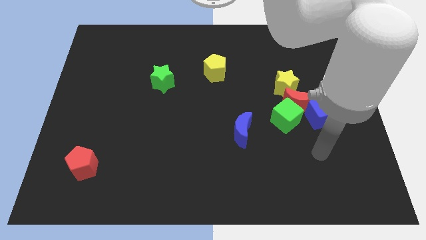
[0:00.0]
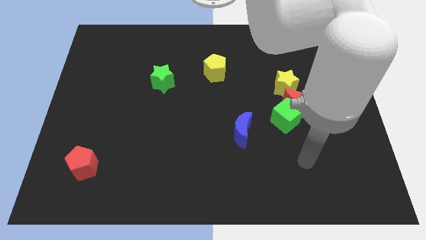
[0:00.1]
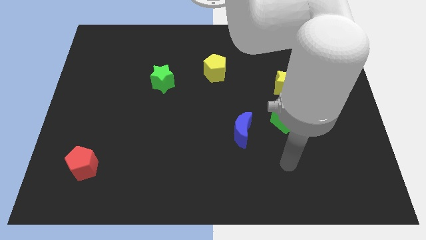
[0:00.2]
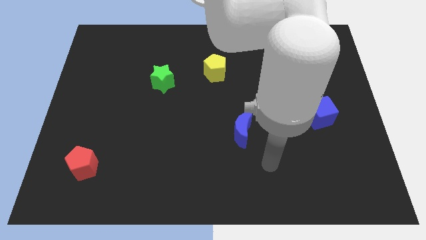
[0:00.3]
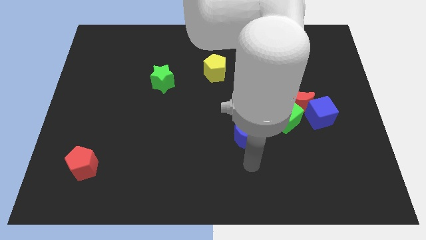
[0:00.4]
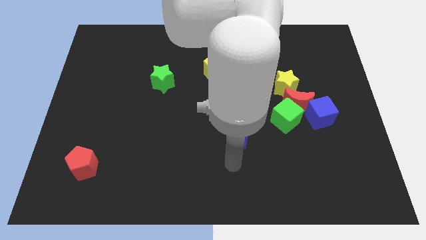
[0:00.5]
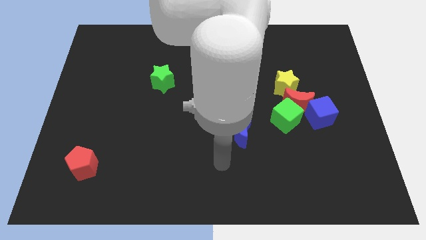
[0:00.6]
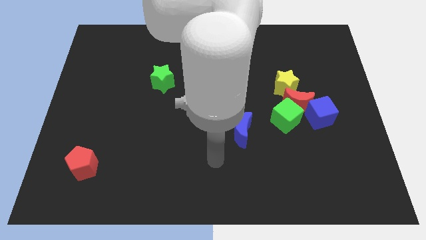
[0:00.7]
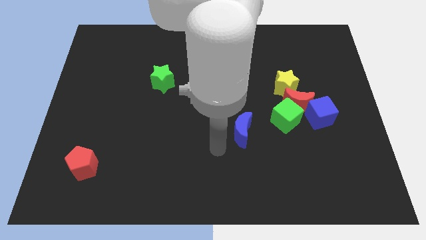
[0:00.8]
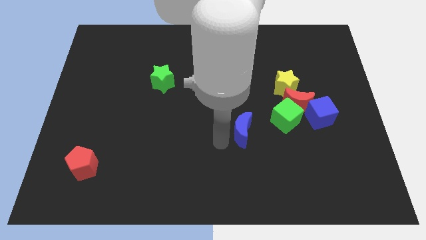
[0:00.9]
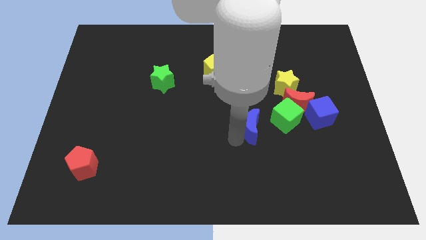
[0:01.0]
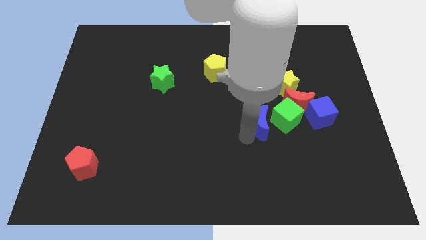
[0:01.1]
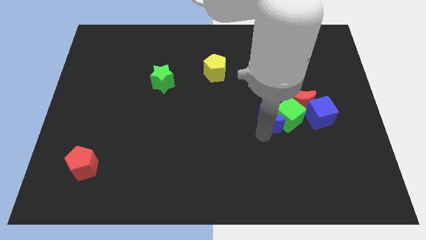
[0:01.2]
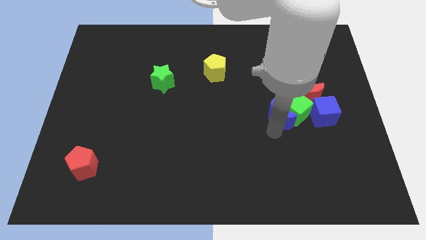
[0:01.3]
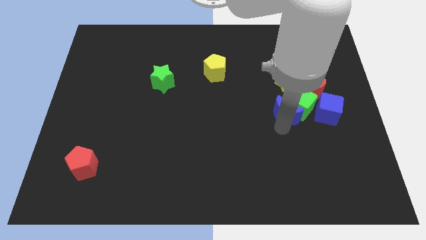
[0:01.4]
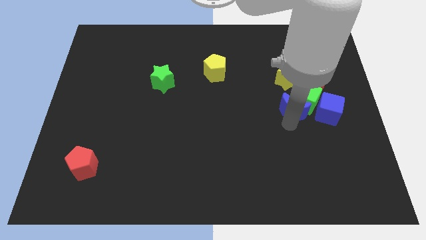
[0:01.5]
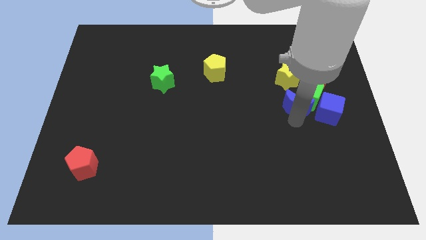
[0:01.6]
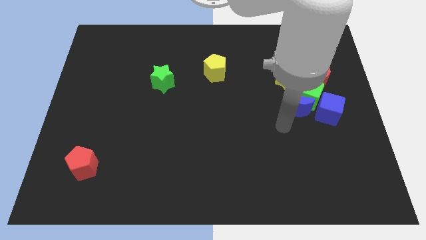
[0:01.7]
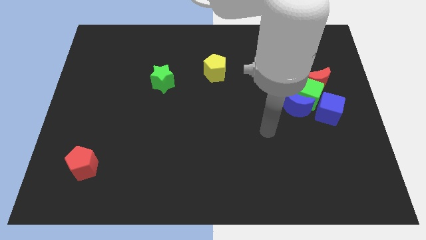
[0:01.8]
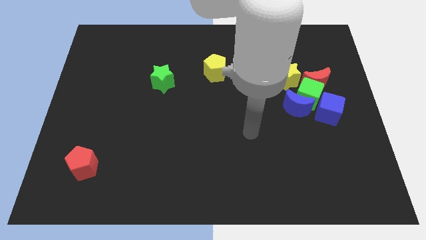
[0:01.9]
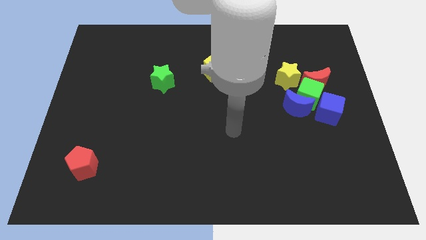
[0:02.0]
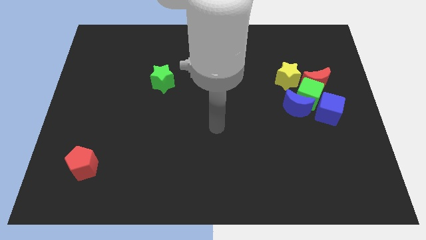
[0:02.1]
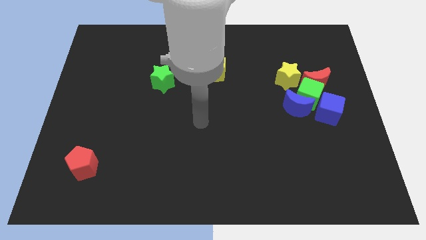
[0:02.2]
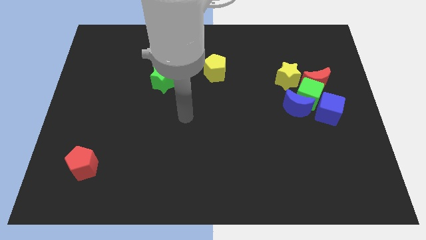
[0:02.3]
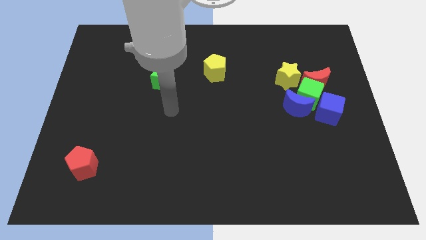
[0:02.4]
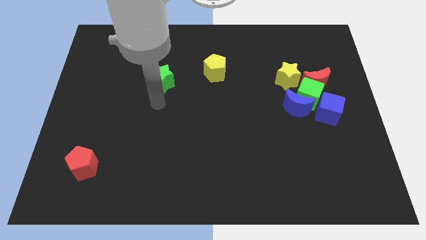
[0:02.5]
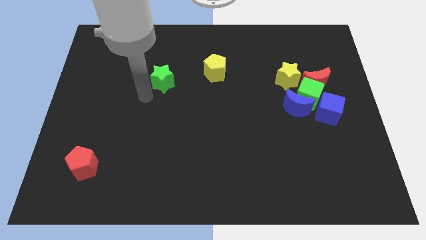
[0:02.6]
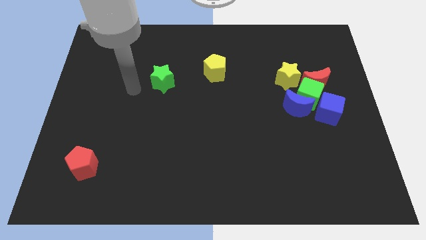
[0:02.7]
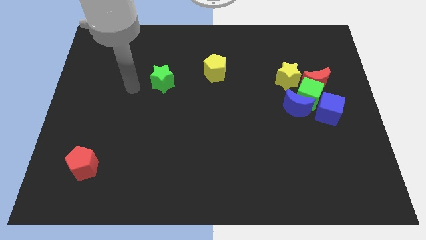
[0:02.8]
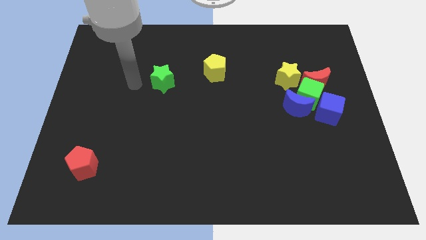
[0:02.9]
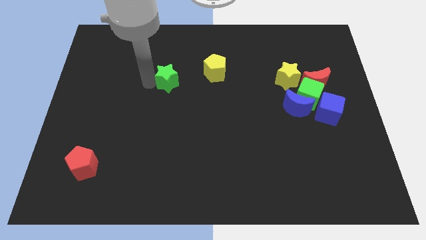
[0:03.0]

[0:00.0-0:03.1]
move the blue moon into the group of blocks

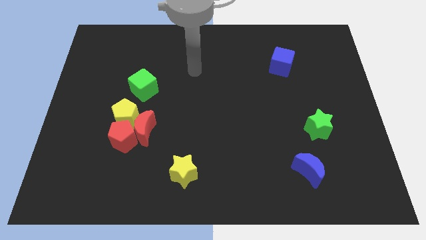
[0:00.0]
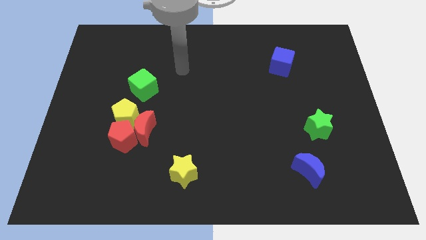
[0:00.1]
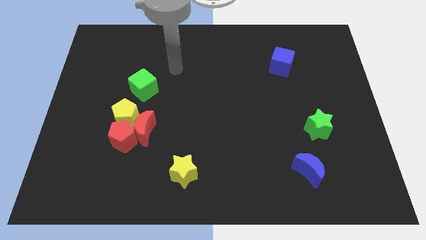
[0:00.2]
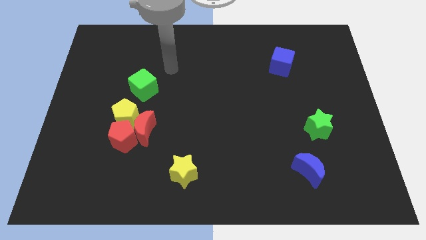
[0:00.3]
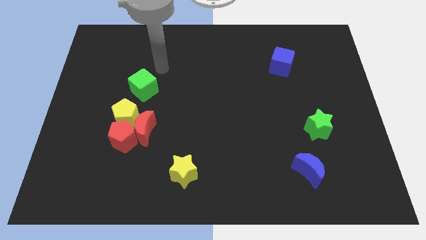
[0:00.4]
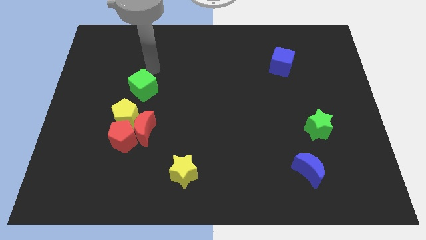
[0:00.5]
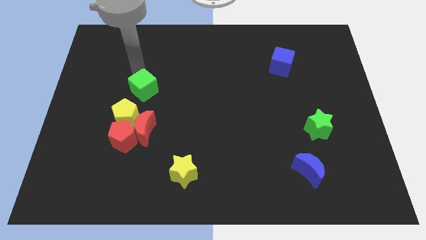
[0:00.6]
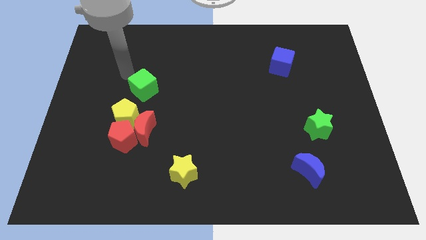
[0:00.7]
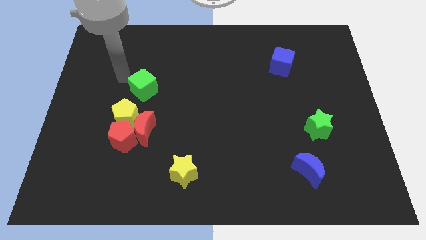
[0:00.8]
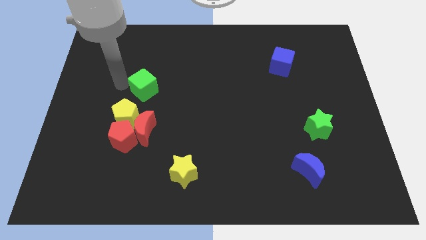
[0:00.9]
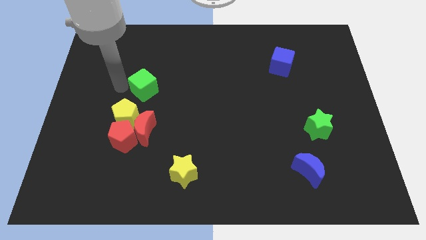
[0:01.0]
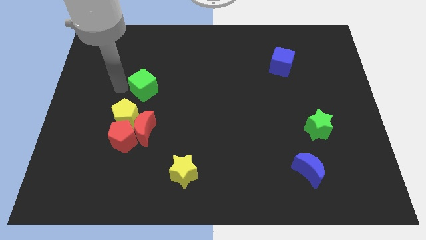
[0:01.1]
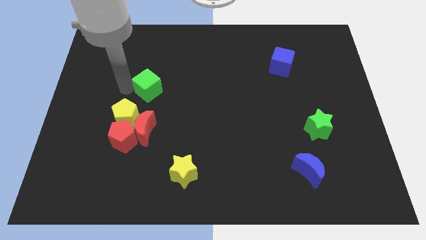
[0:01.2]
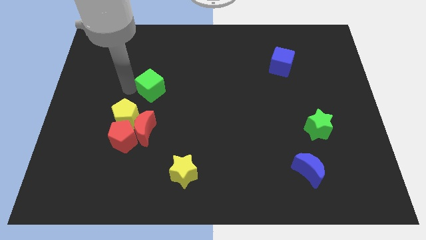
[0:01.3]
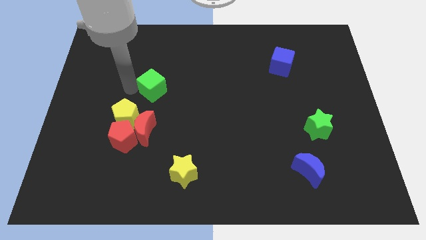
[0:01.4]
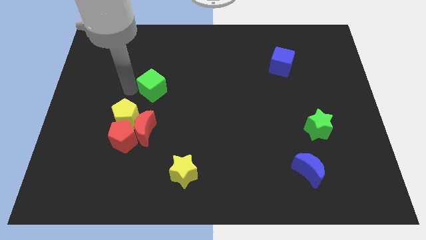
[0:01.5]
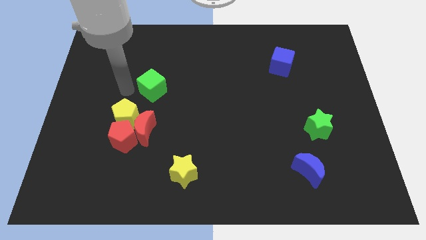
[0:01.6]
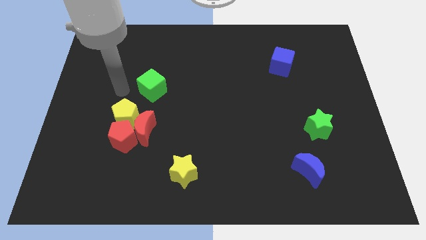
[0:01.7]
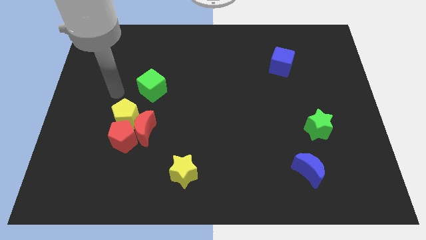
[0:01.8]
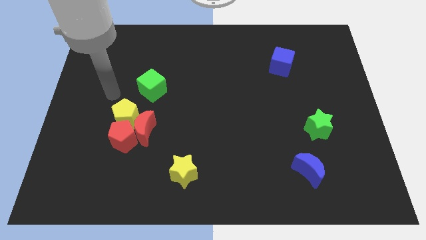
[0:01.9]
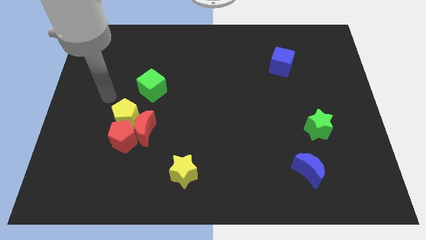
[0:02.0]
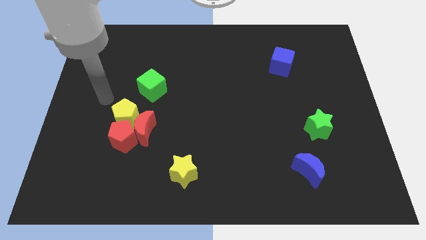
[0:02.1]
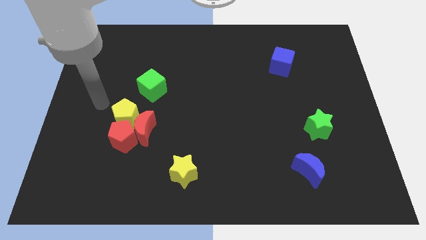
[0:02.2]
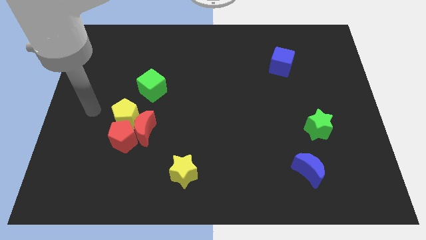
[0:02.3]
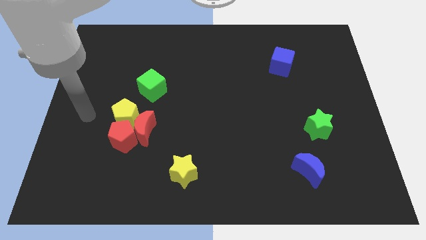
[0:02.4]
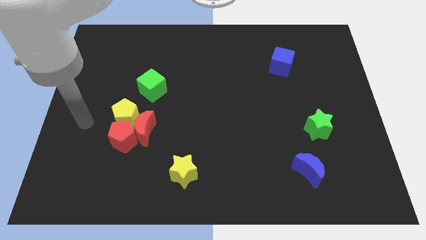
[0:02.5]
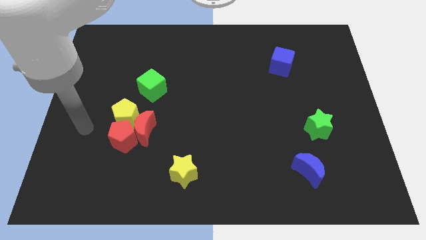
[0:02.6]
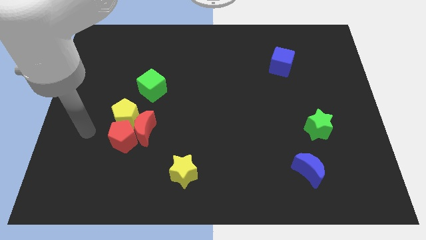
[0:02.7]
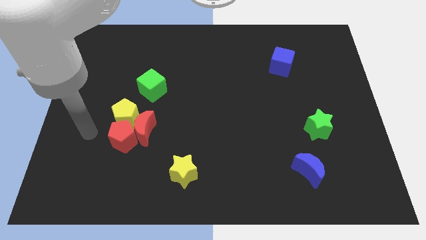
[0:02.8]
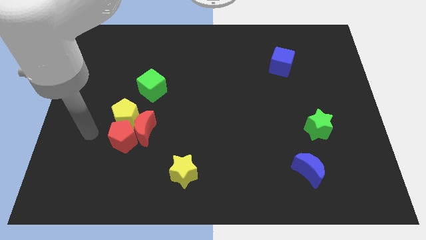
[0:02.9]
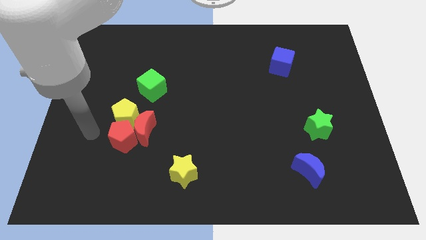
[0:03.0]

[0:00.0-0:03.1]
push the green cube slightly to right

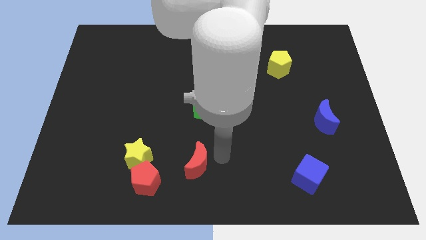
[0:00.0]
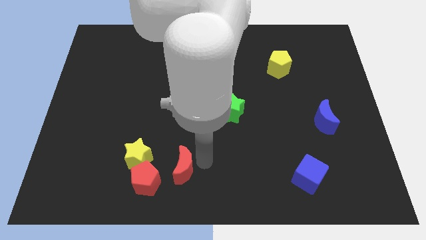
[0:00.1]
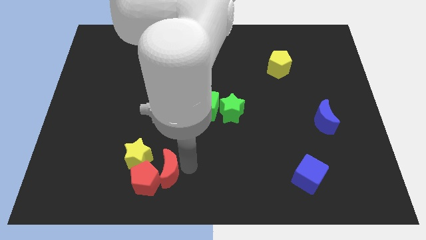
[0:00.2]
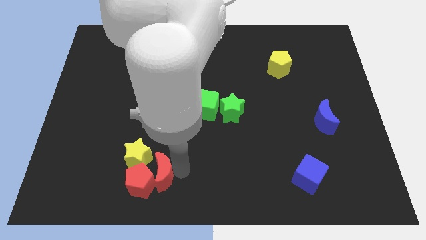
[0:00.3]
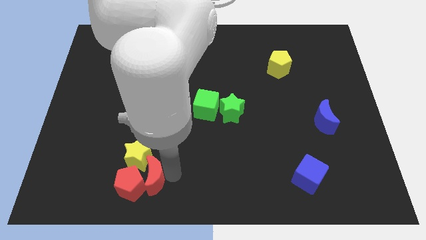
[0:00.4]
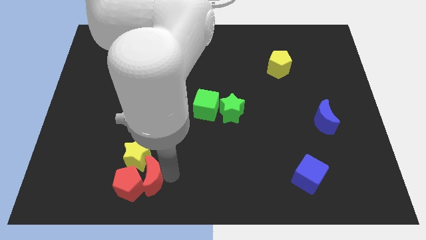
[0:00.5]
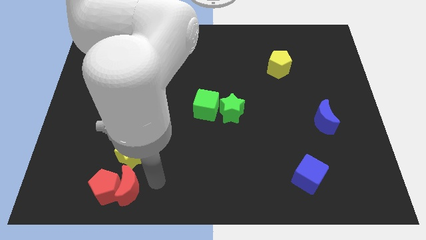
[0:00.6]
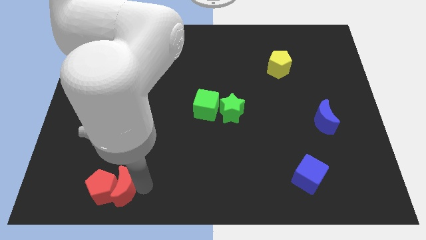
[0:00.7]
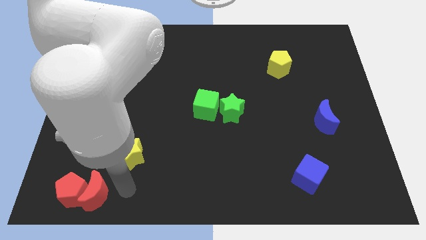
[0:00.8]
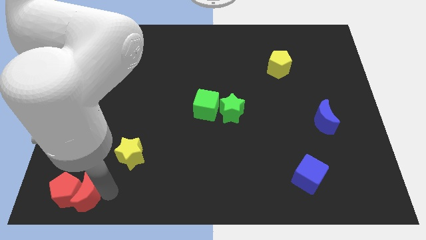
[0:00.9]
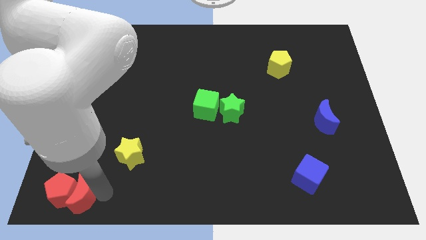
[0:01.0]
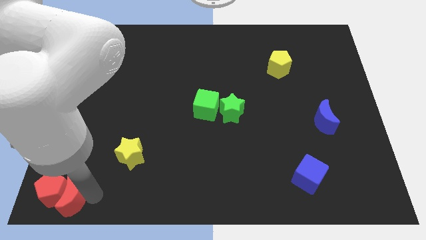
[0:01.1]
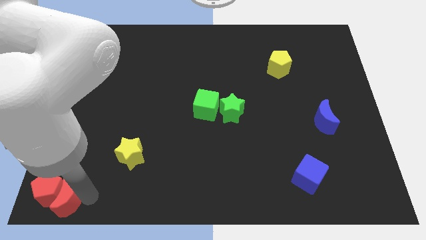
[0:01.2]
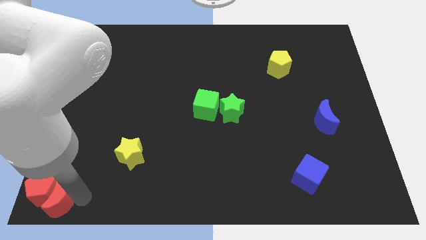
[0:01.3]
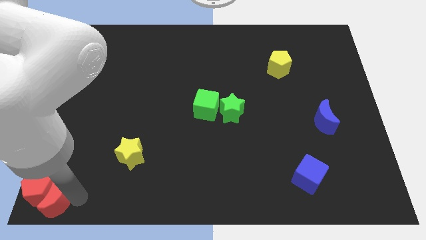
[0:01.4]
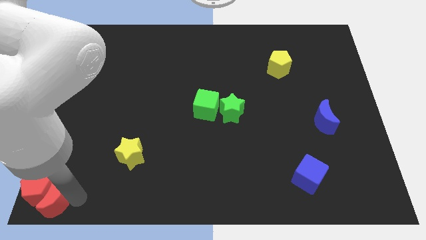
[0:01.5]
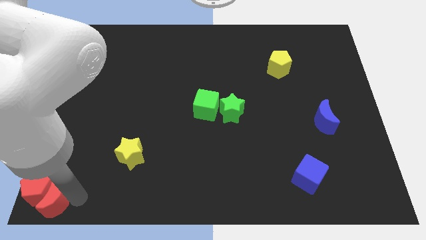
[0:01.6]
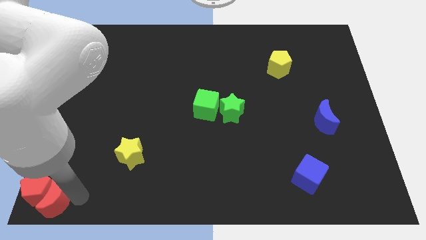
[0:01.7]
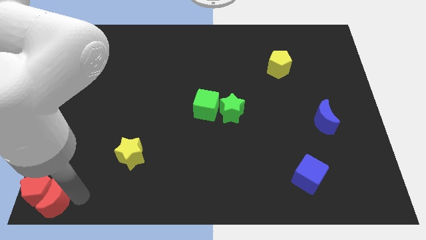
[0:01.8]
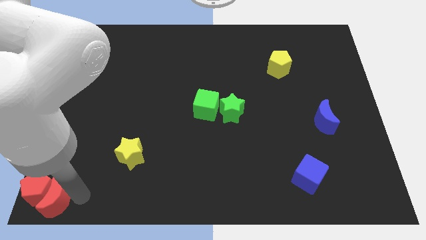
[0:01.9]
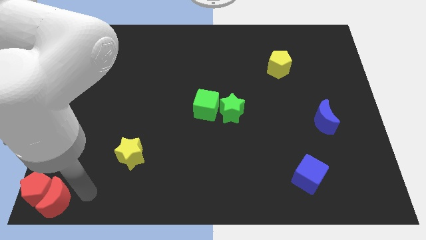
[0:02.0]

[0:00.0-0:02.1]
move red blocks to the bottom left

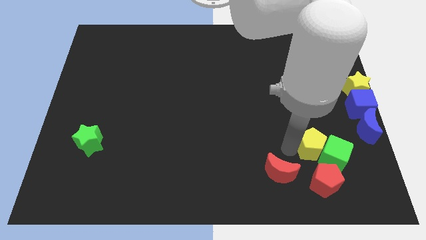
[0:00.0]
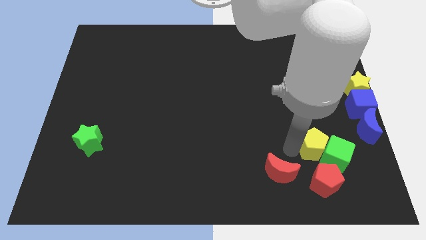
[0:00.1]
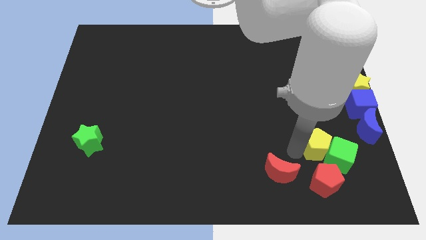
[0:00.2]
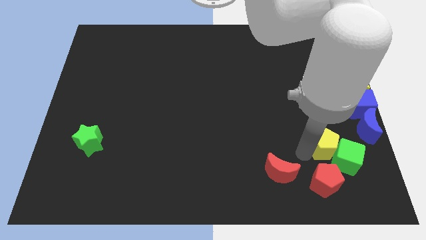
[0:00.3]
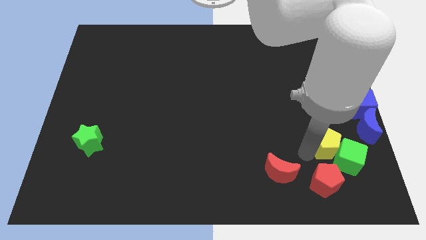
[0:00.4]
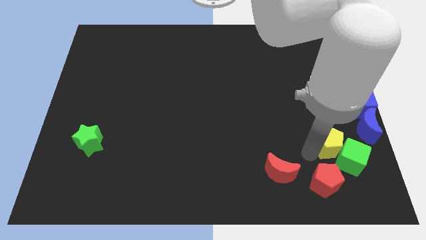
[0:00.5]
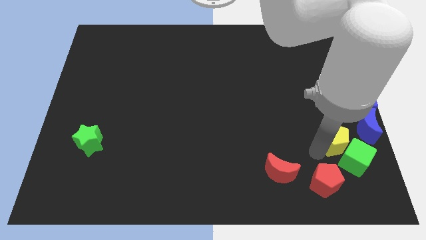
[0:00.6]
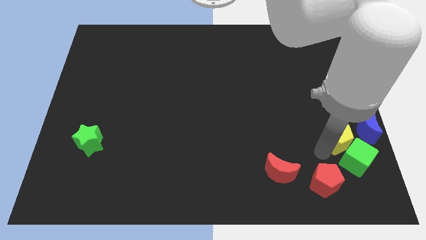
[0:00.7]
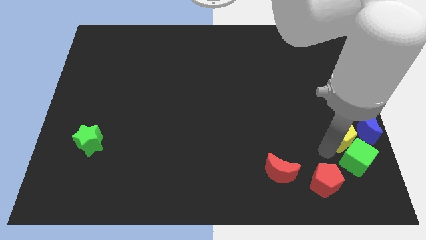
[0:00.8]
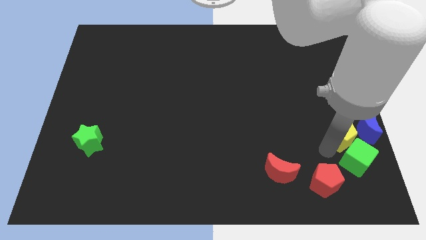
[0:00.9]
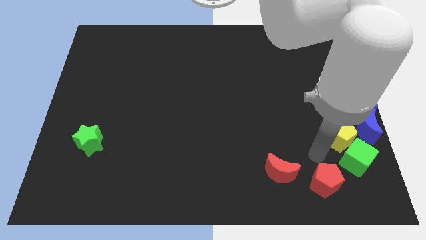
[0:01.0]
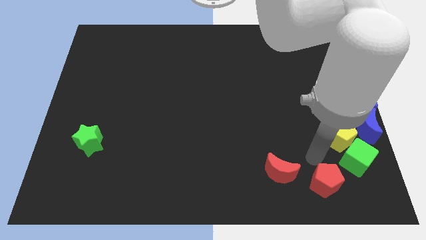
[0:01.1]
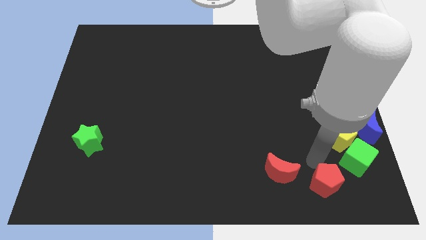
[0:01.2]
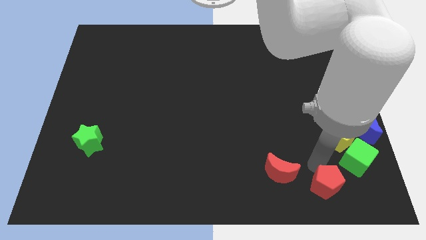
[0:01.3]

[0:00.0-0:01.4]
move the yellow pentagon left to the blue crescent
